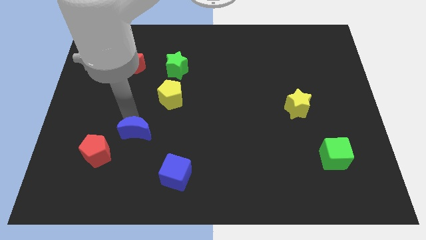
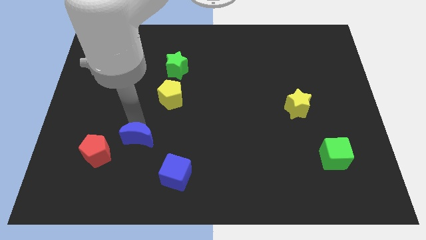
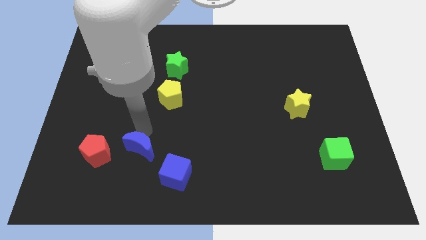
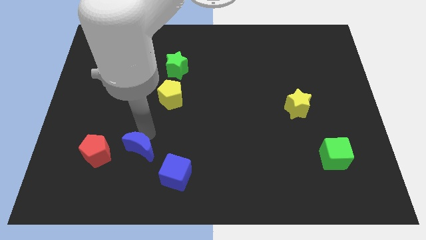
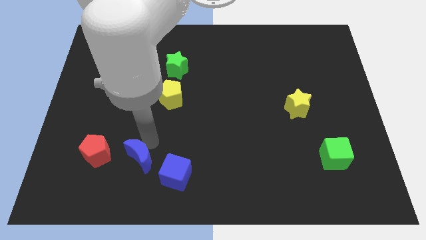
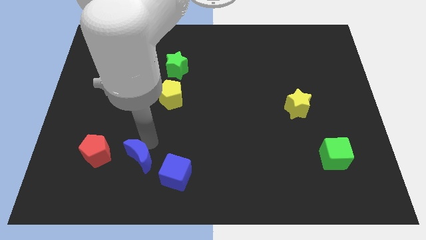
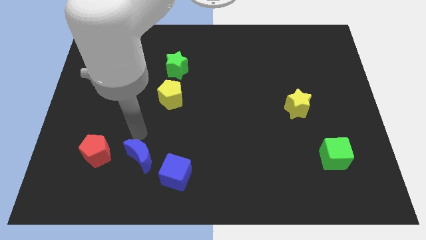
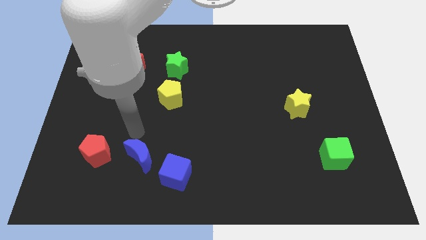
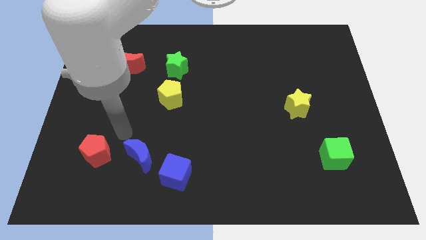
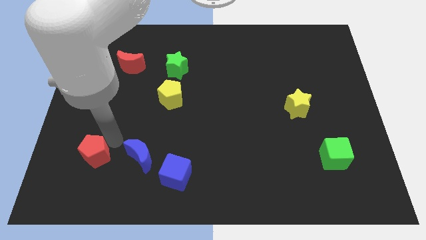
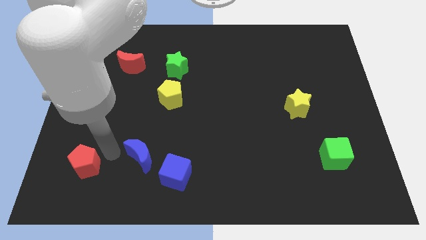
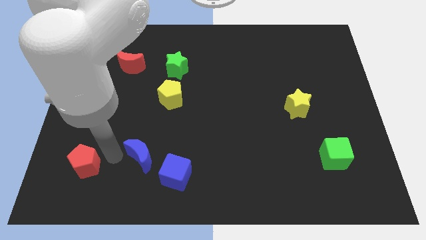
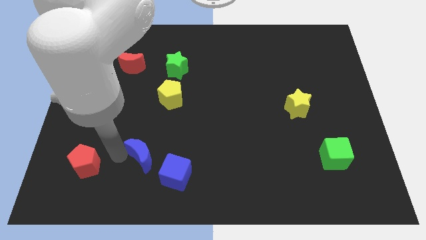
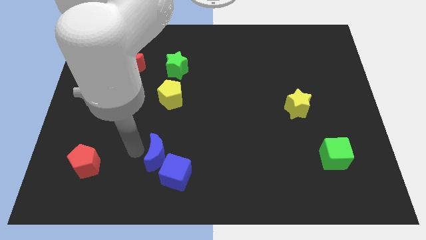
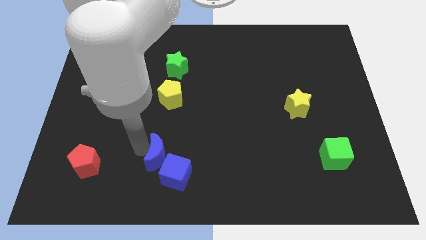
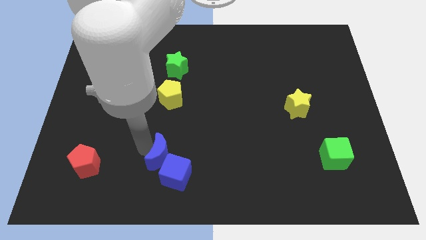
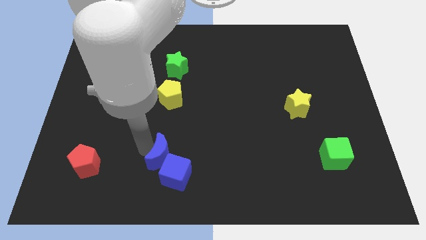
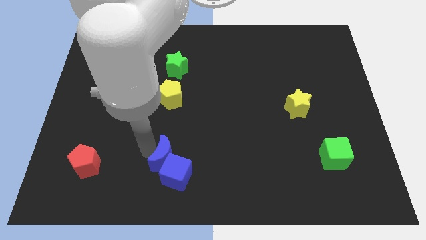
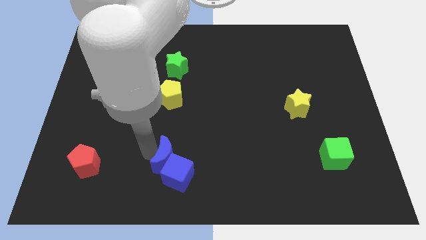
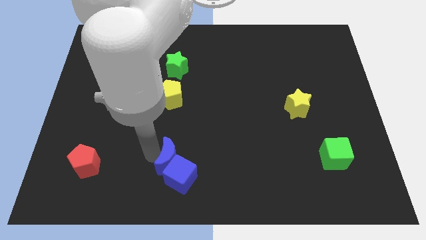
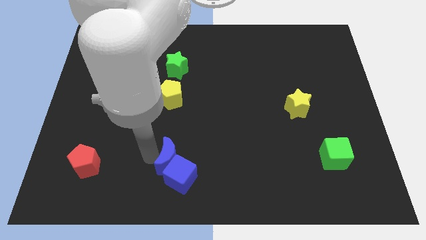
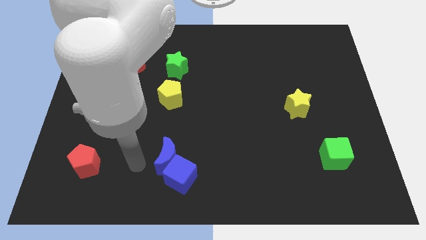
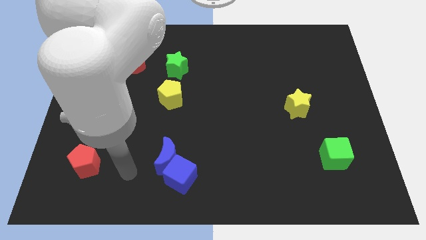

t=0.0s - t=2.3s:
push blue cube with the blue crescent slightly downwards

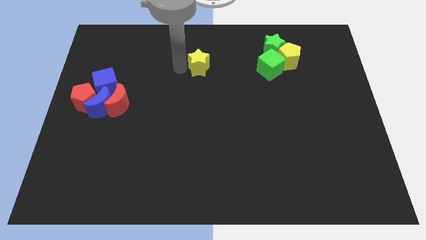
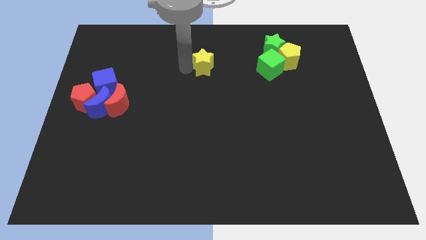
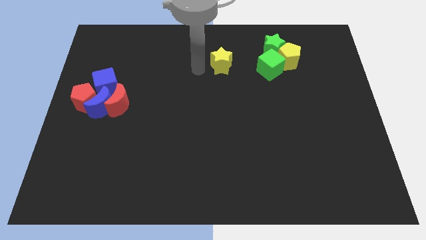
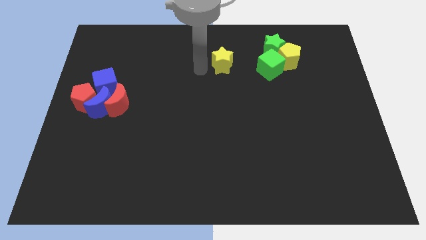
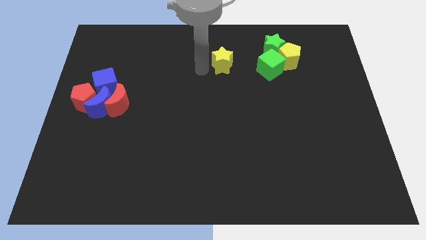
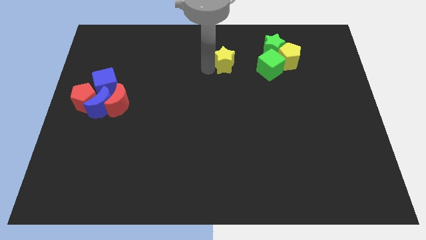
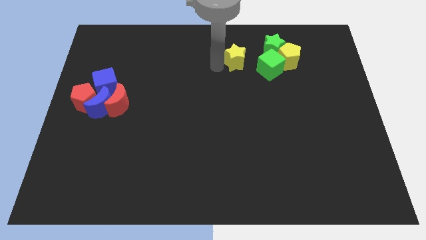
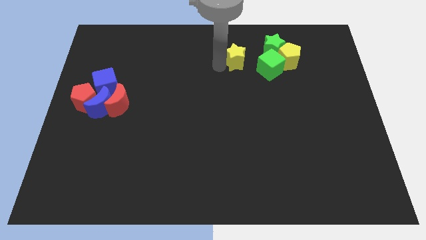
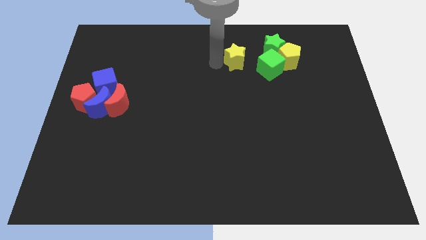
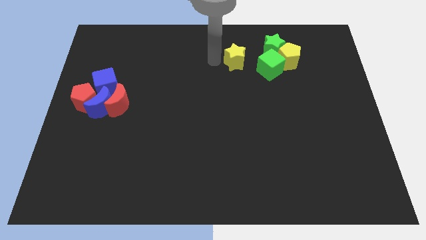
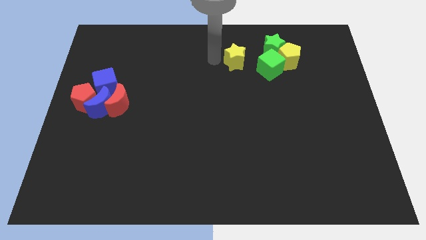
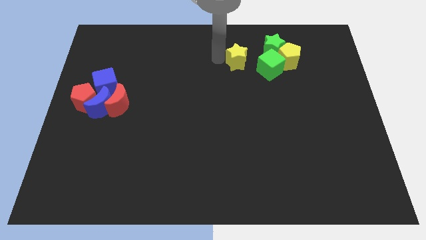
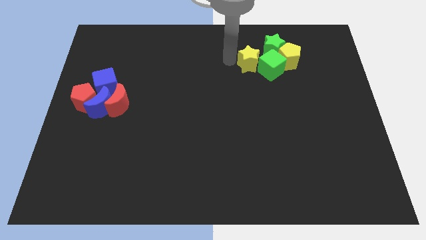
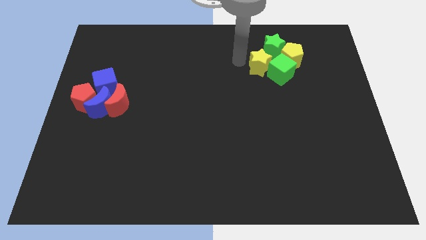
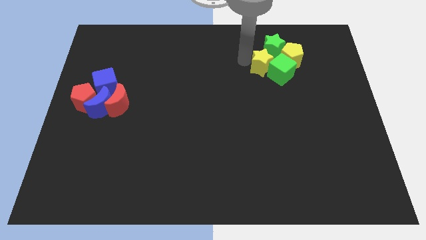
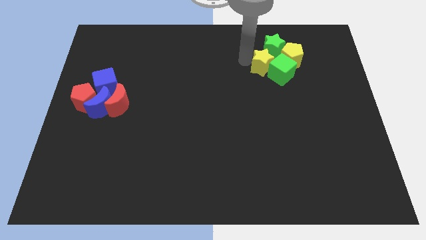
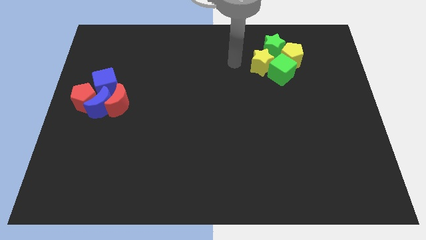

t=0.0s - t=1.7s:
move the yellow star into the left of the green cube

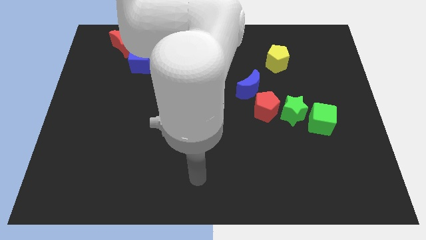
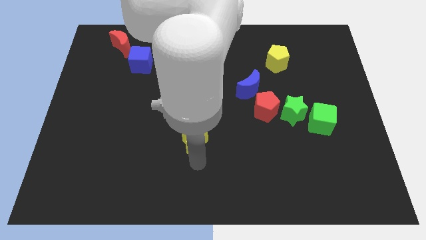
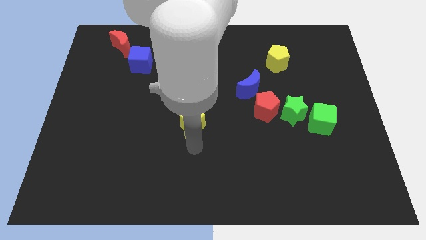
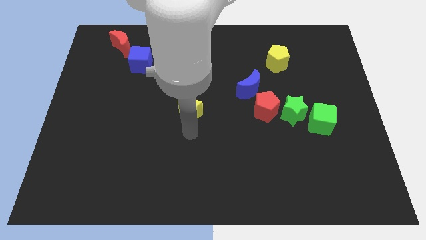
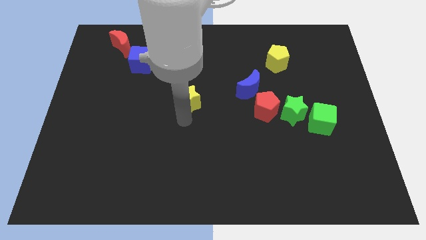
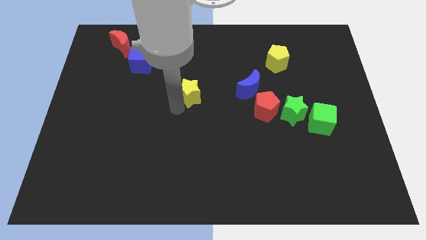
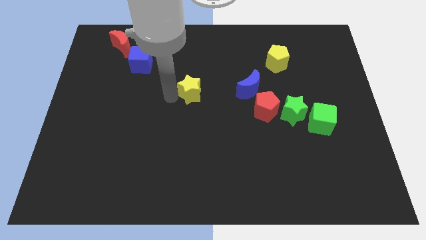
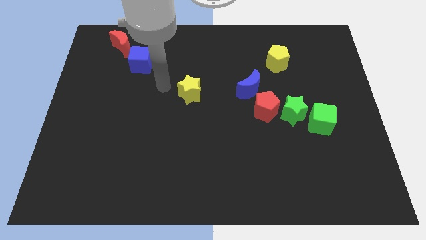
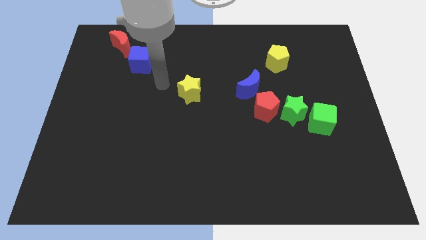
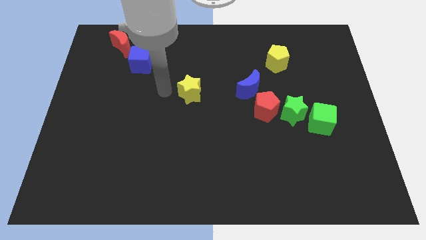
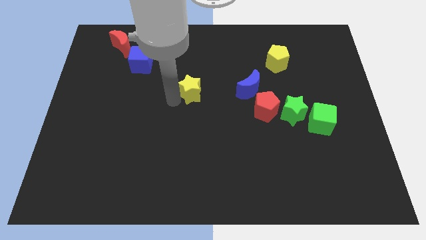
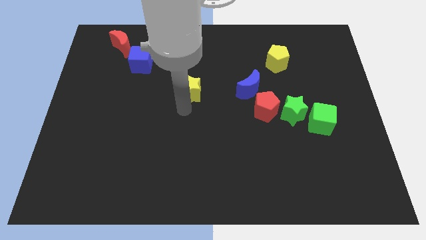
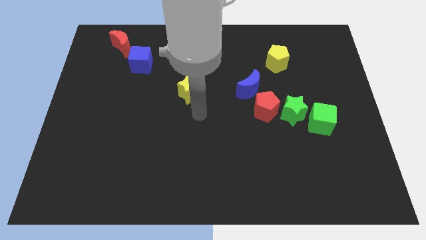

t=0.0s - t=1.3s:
drag the yellow star towards the top

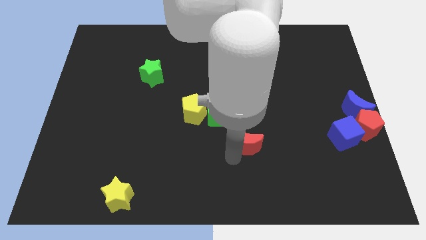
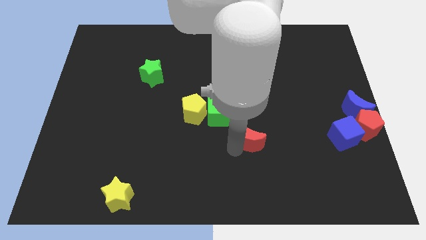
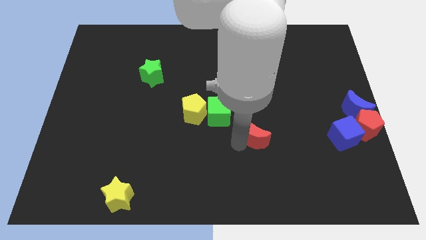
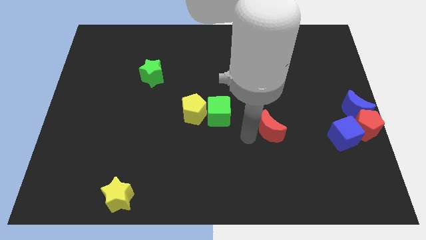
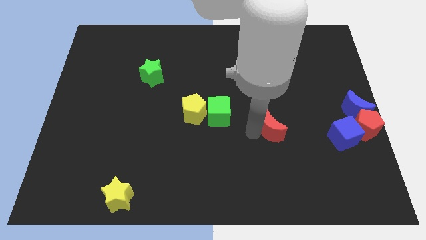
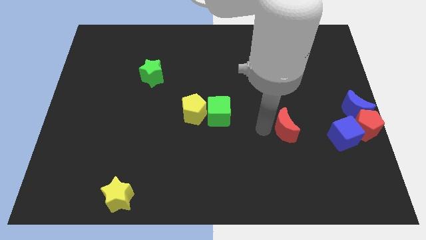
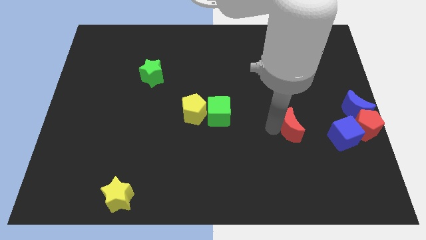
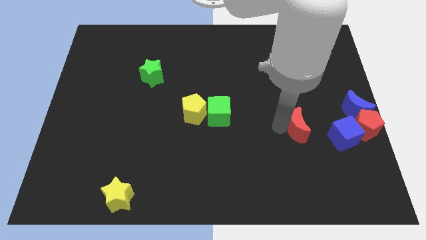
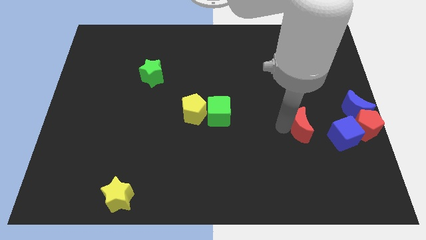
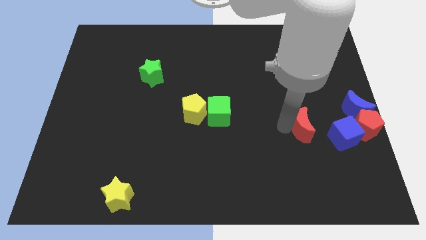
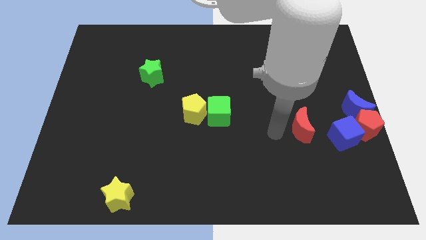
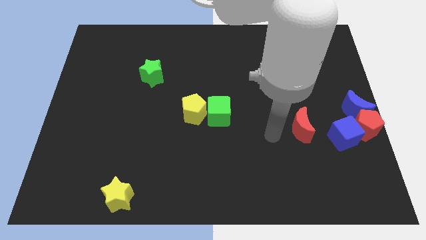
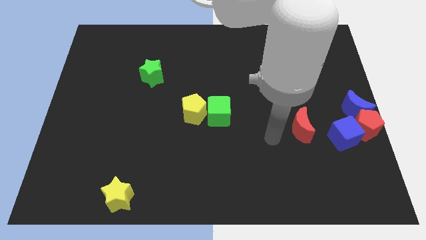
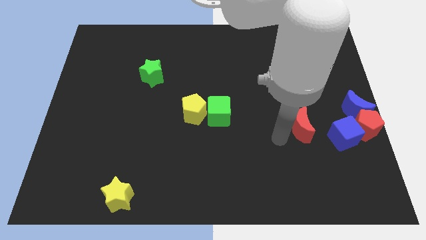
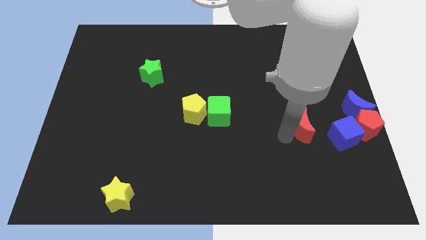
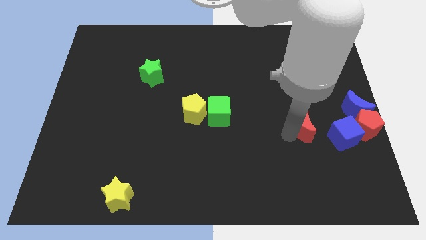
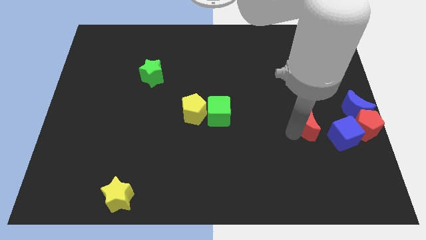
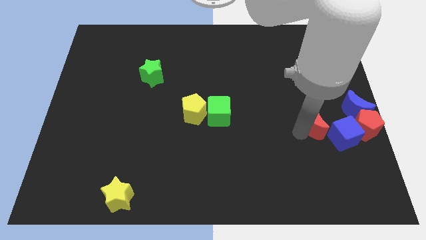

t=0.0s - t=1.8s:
move the red crescent towards blue cube

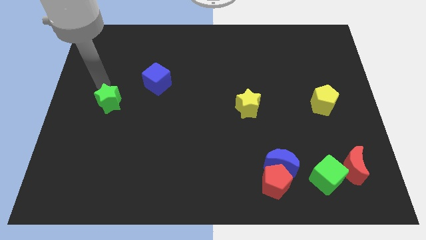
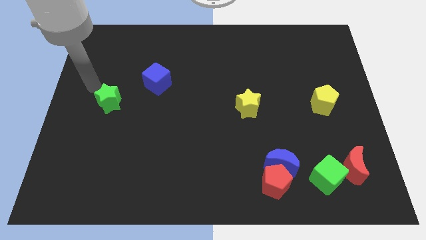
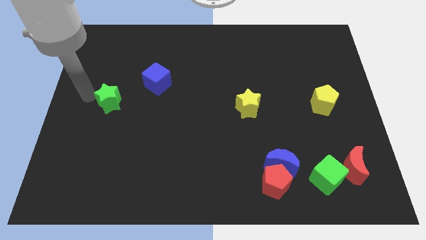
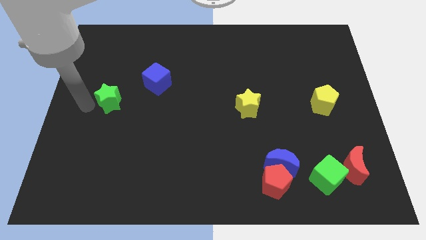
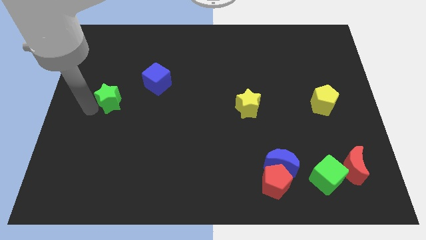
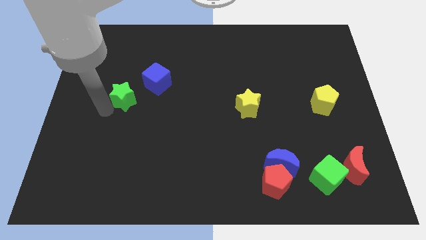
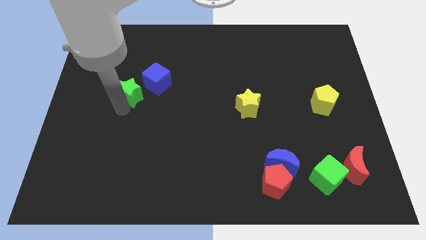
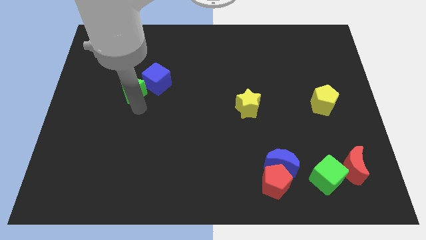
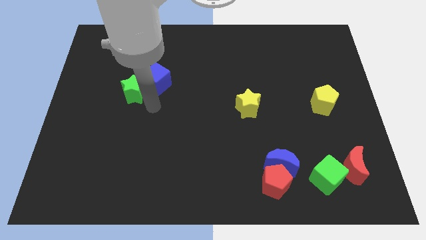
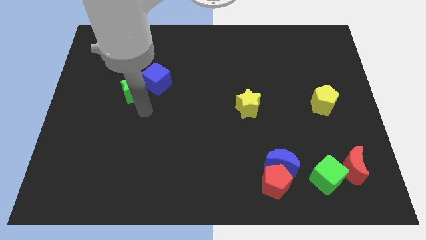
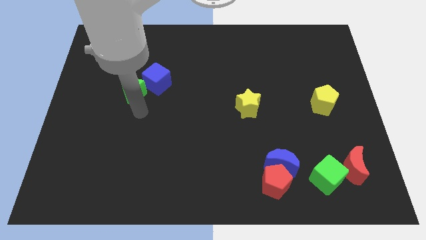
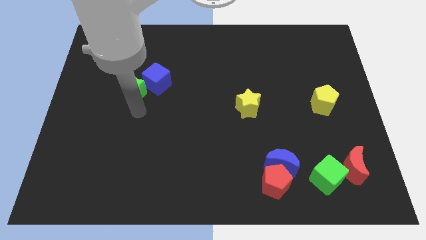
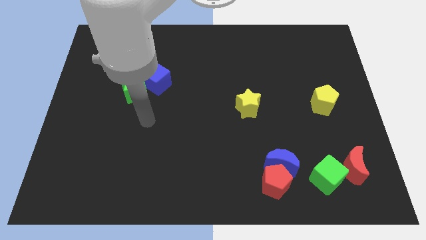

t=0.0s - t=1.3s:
push the green star into the blue cube

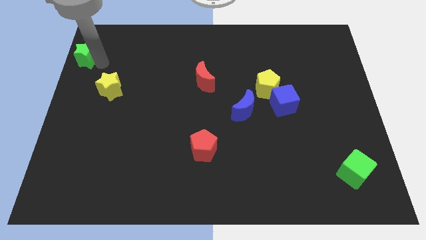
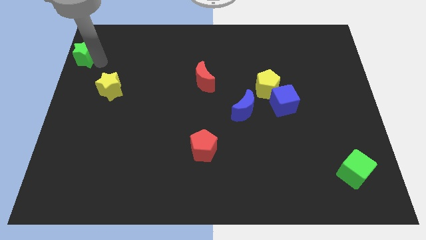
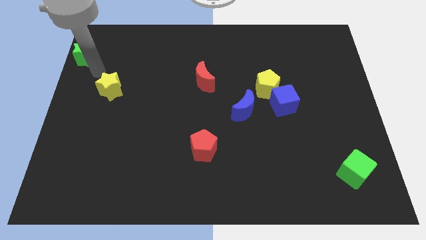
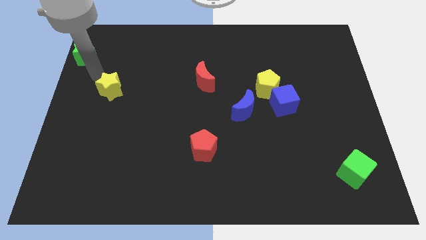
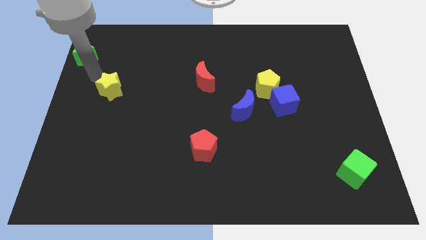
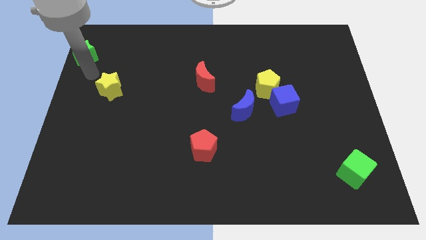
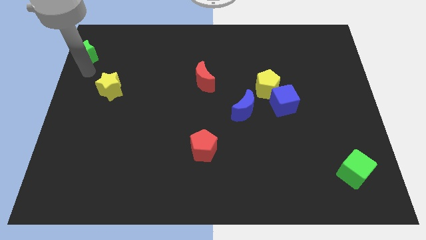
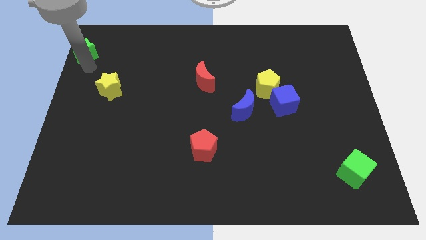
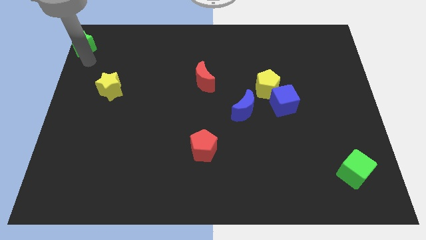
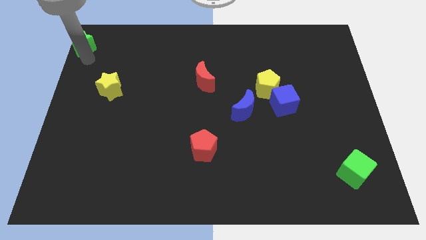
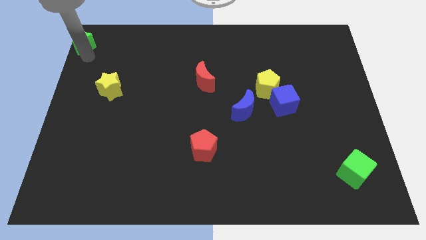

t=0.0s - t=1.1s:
push green star towards top left
